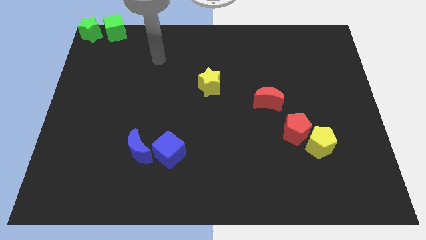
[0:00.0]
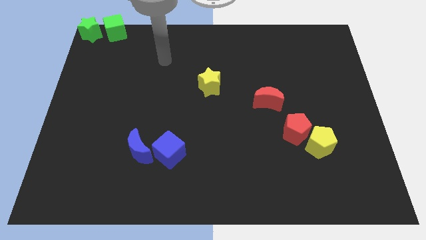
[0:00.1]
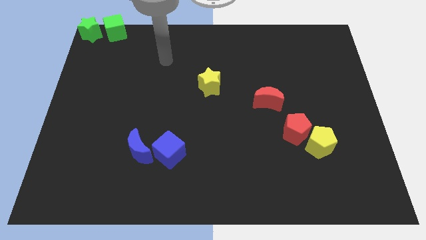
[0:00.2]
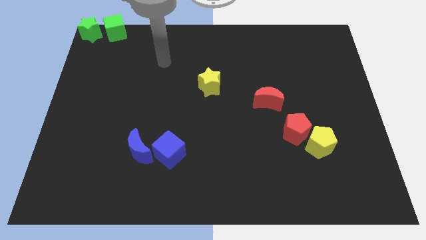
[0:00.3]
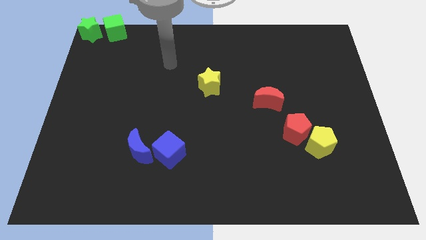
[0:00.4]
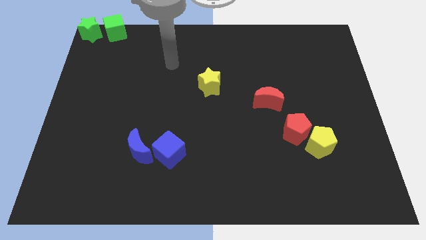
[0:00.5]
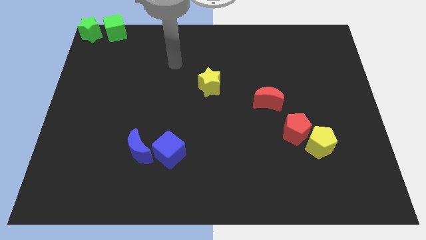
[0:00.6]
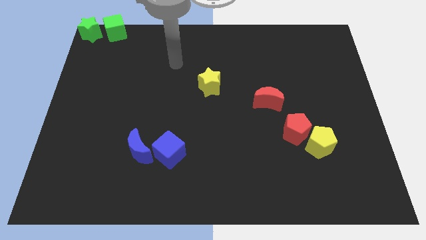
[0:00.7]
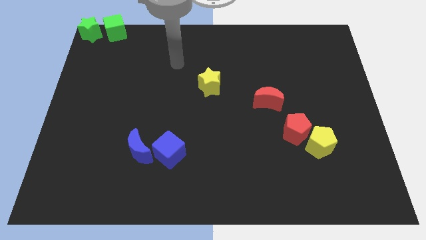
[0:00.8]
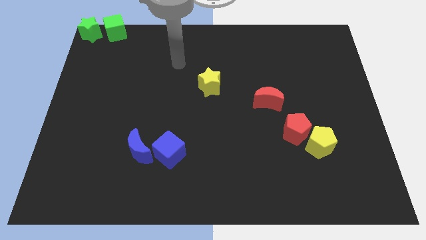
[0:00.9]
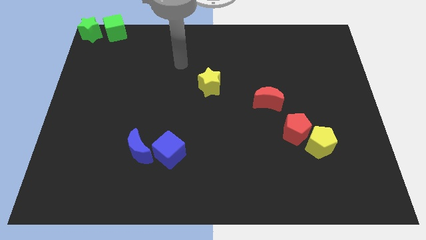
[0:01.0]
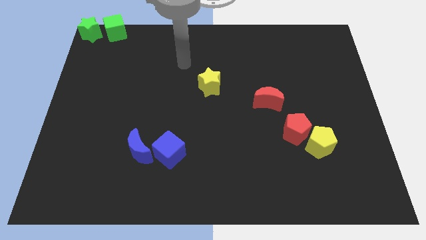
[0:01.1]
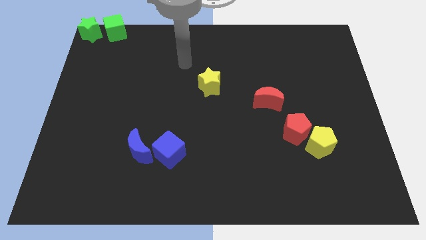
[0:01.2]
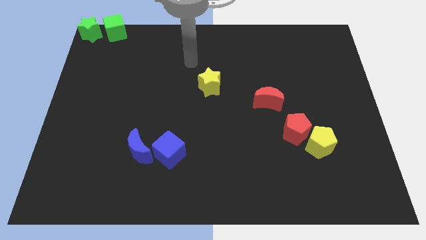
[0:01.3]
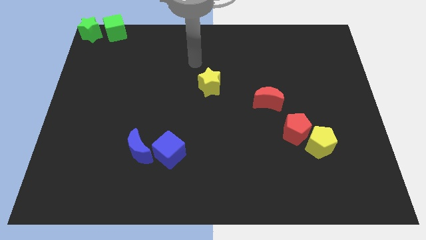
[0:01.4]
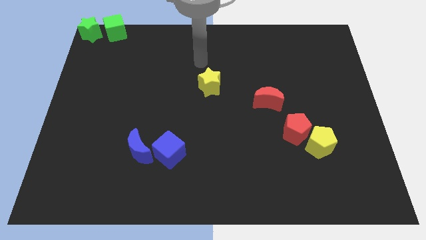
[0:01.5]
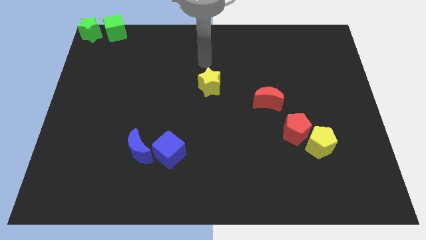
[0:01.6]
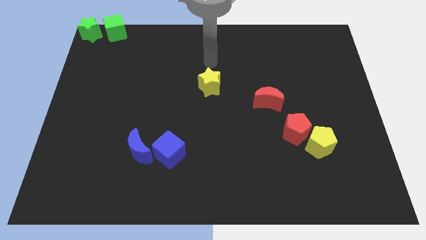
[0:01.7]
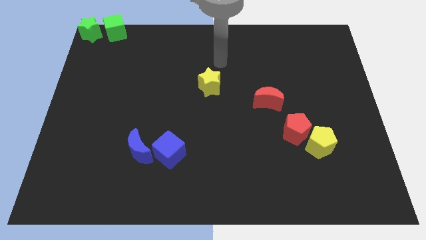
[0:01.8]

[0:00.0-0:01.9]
move your arm to the top of yellow star

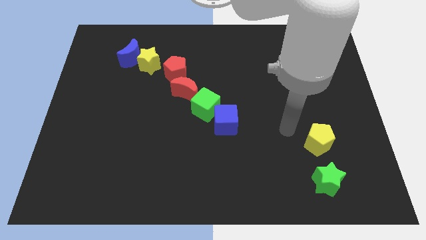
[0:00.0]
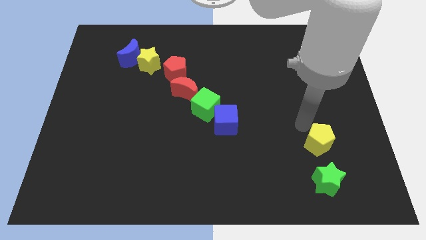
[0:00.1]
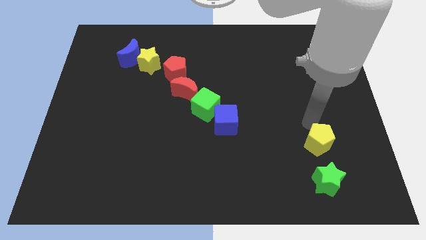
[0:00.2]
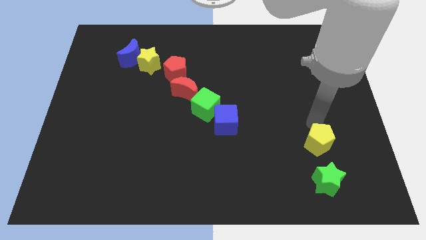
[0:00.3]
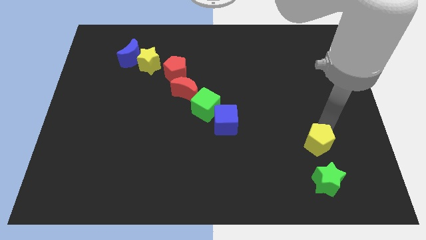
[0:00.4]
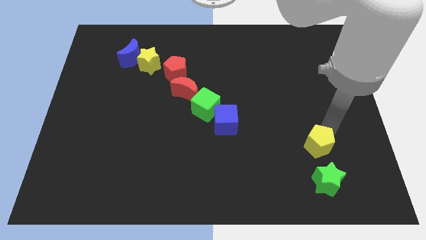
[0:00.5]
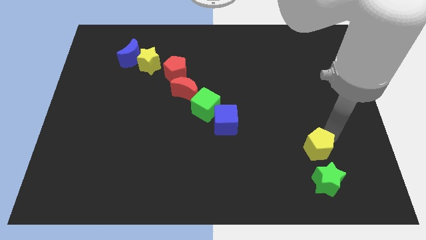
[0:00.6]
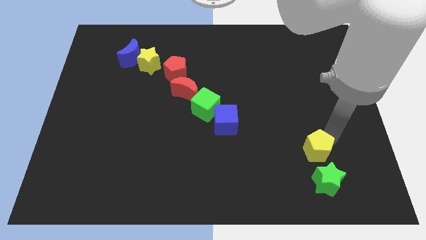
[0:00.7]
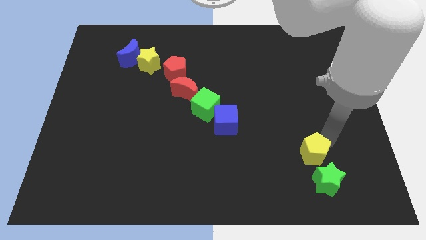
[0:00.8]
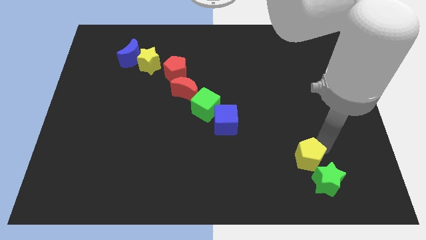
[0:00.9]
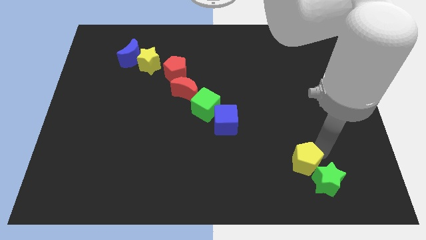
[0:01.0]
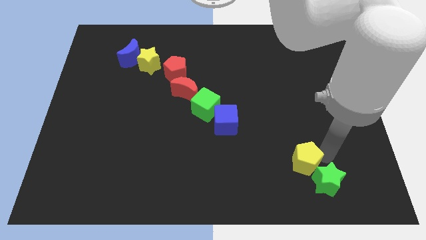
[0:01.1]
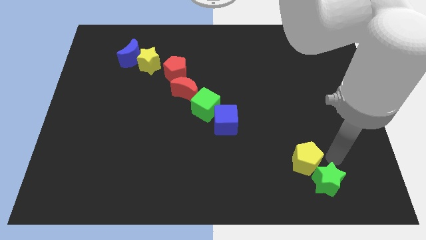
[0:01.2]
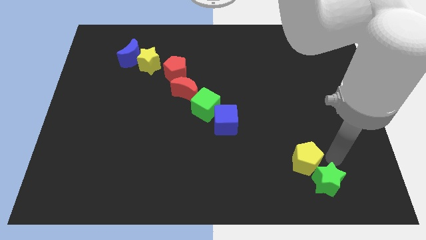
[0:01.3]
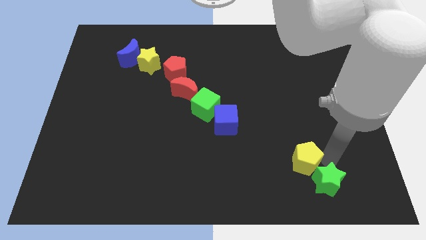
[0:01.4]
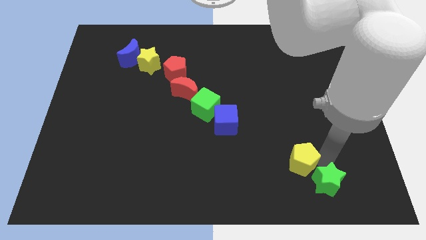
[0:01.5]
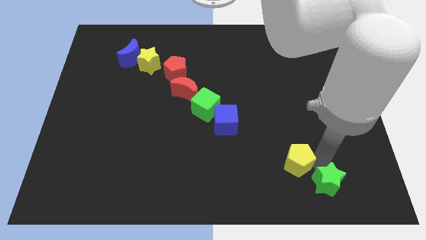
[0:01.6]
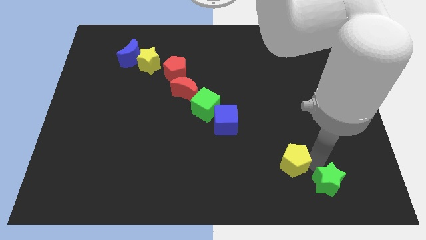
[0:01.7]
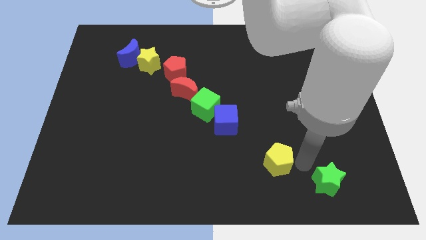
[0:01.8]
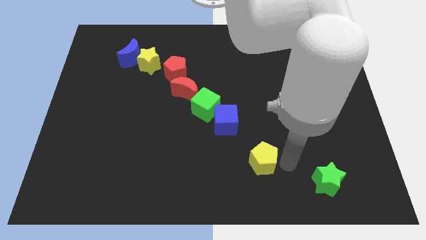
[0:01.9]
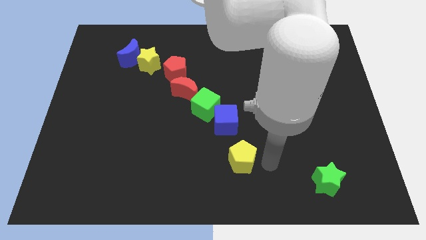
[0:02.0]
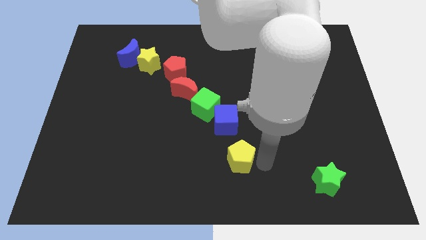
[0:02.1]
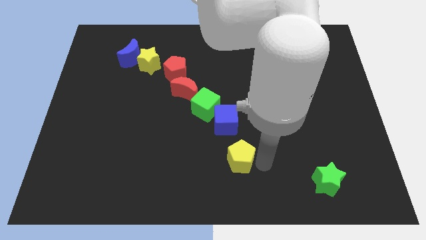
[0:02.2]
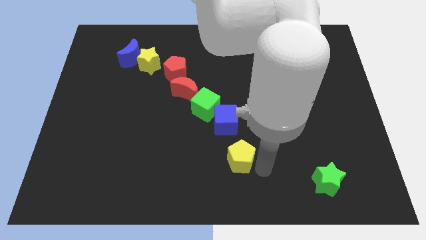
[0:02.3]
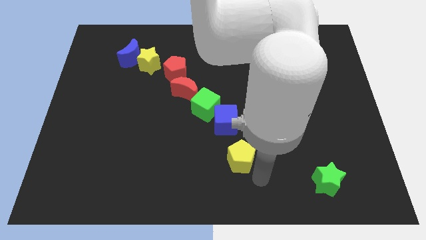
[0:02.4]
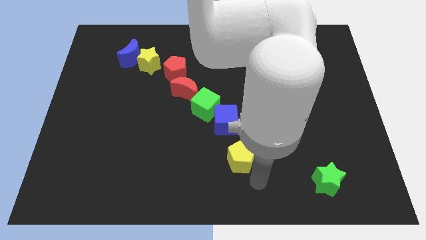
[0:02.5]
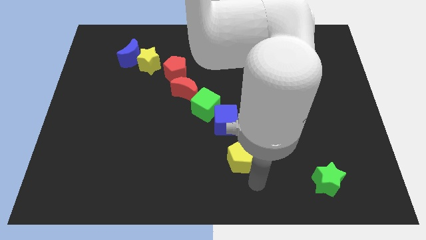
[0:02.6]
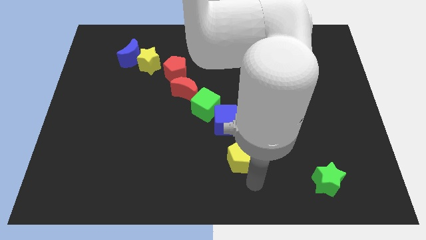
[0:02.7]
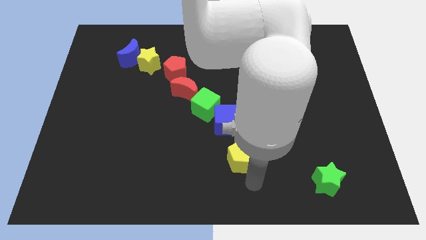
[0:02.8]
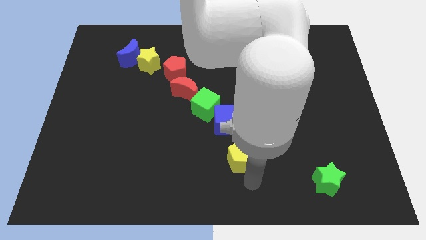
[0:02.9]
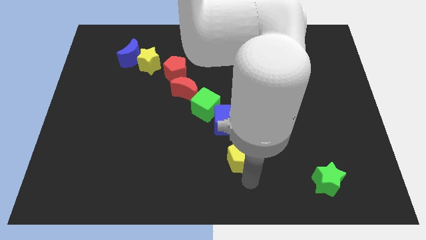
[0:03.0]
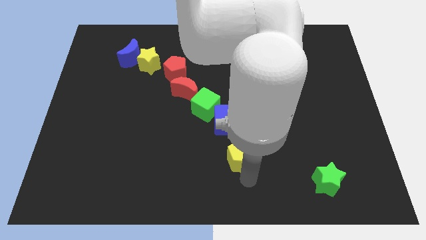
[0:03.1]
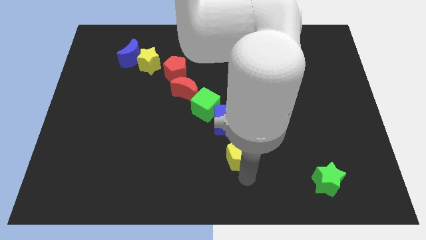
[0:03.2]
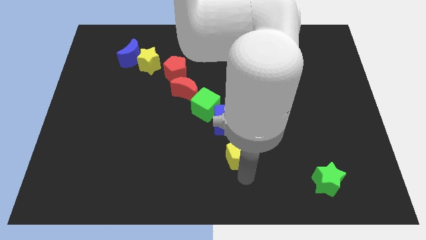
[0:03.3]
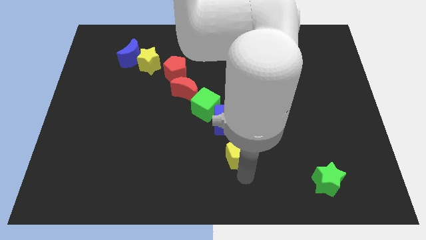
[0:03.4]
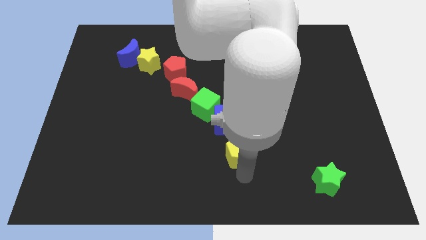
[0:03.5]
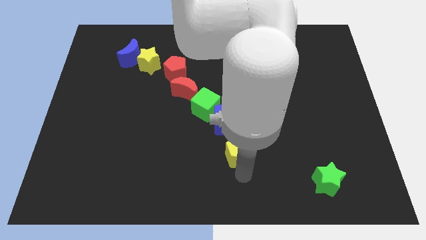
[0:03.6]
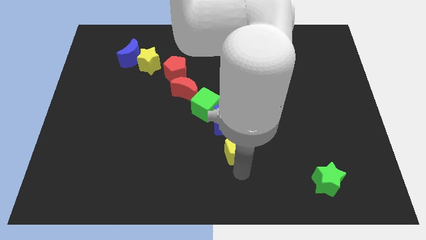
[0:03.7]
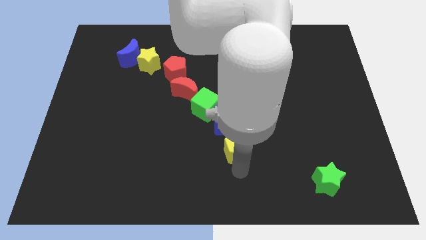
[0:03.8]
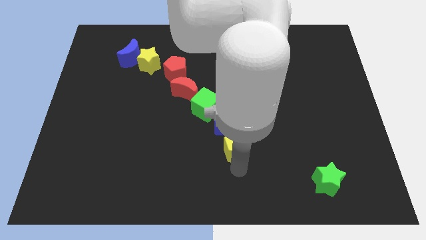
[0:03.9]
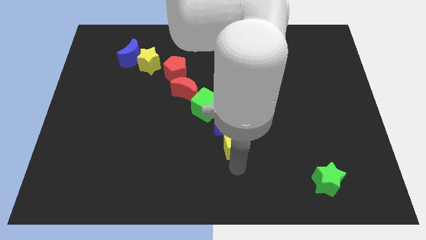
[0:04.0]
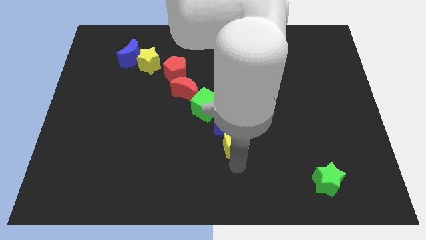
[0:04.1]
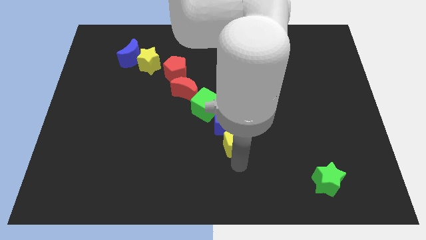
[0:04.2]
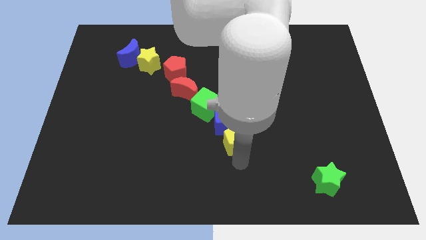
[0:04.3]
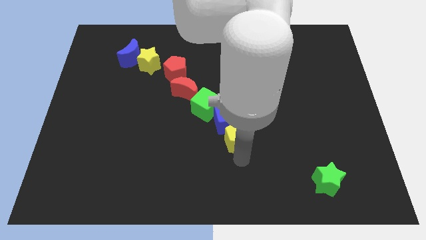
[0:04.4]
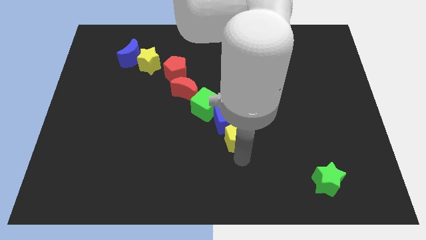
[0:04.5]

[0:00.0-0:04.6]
move the yellow pentagon into the blue cube

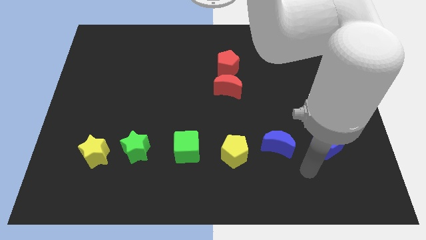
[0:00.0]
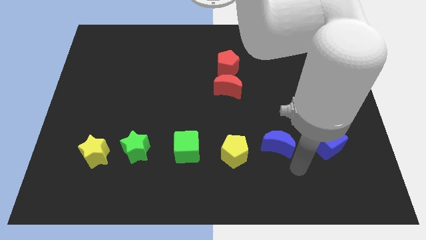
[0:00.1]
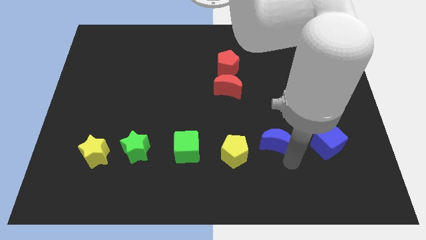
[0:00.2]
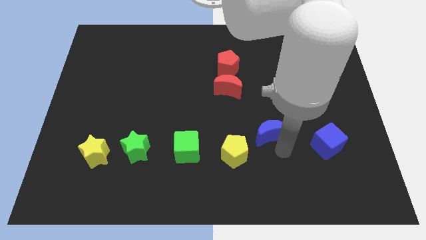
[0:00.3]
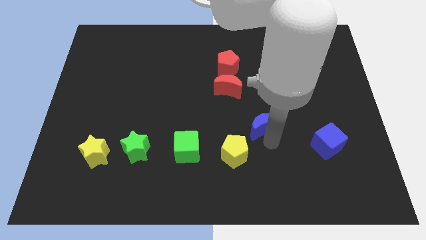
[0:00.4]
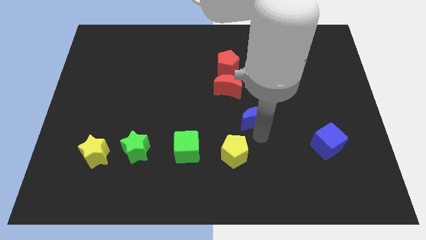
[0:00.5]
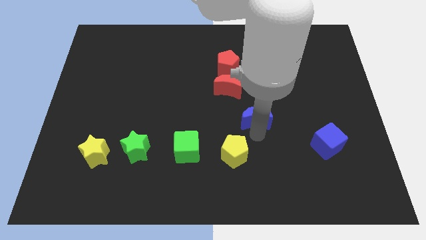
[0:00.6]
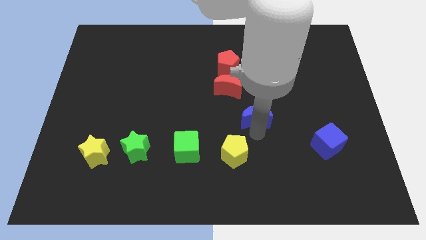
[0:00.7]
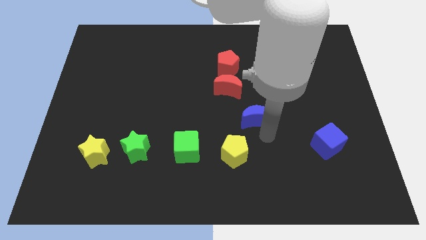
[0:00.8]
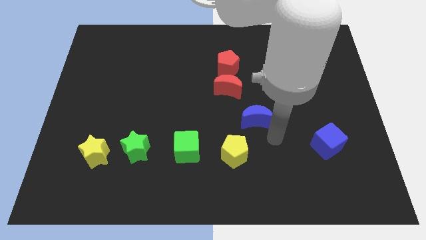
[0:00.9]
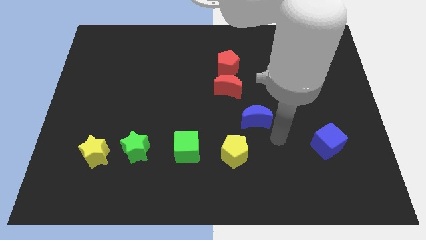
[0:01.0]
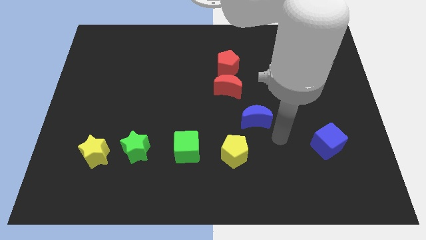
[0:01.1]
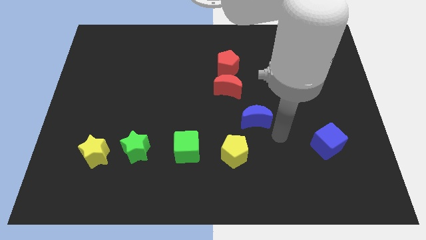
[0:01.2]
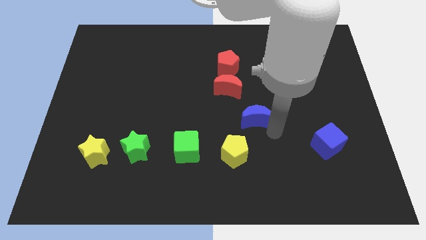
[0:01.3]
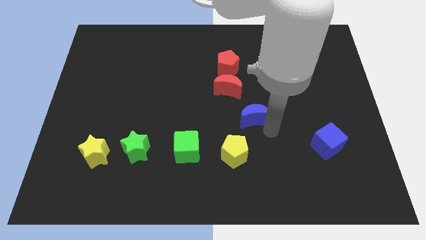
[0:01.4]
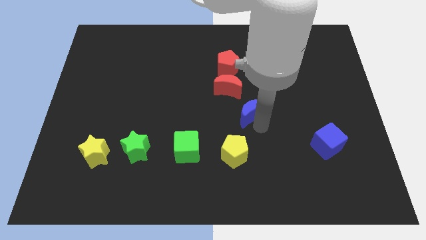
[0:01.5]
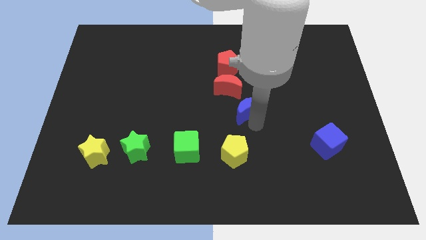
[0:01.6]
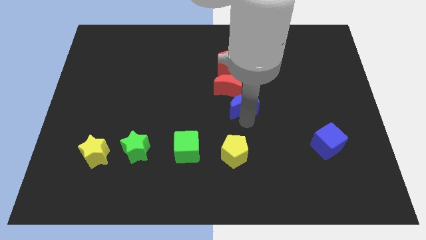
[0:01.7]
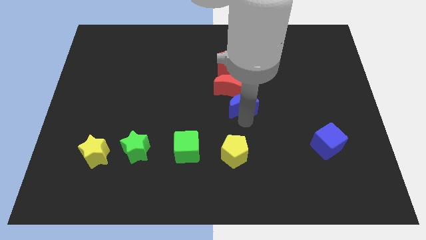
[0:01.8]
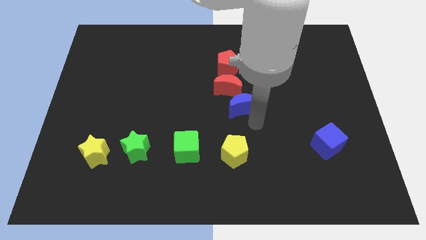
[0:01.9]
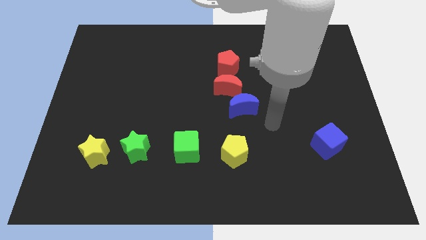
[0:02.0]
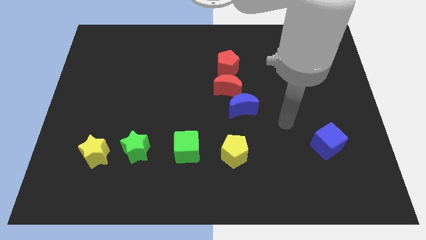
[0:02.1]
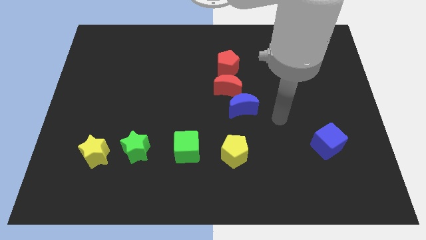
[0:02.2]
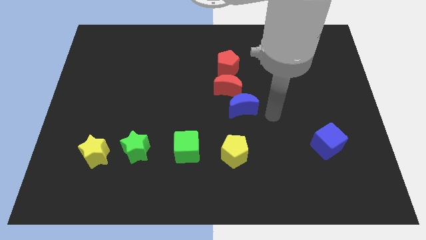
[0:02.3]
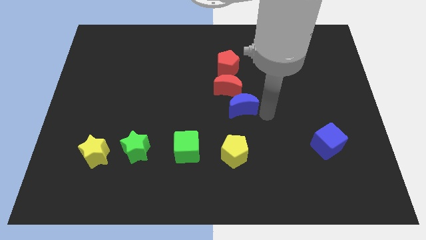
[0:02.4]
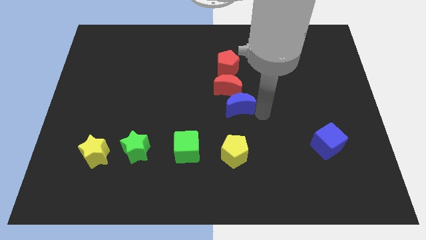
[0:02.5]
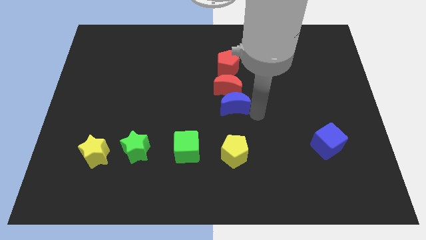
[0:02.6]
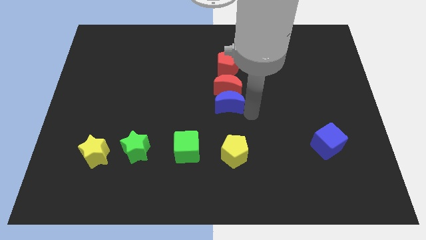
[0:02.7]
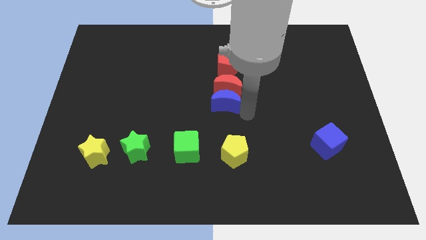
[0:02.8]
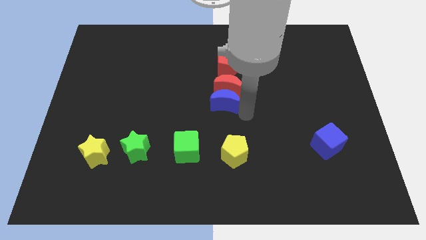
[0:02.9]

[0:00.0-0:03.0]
move the blue crescent into the red crescent
